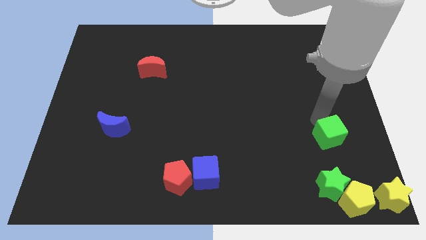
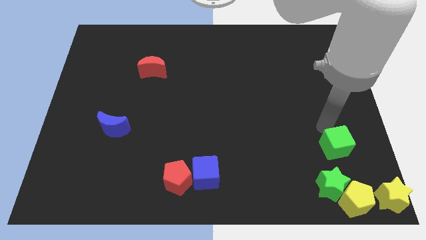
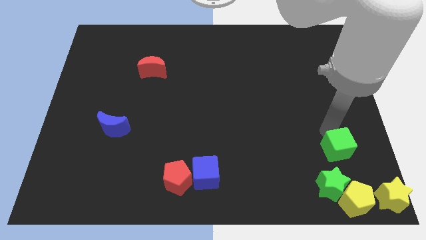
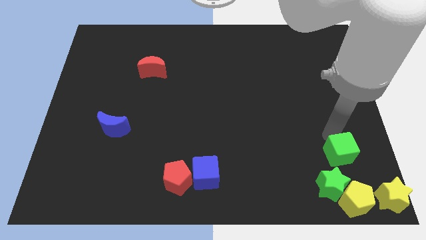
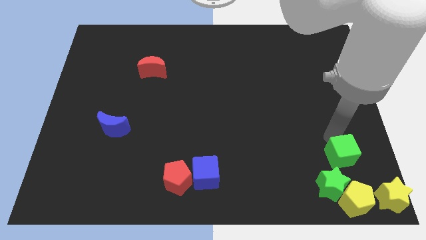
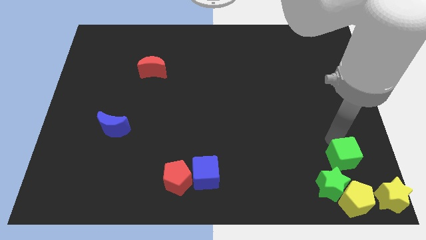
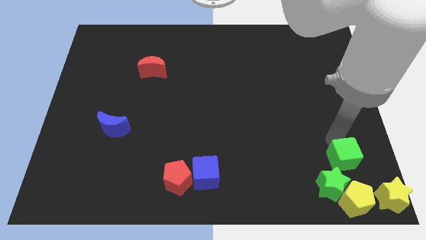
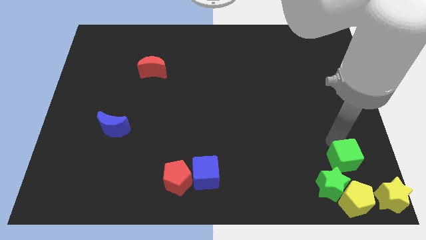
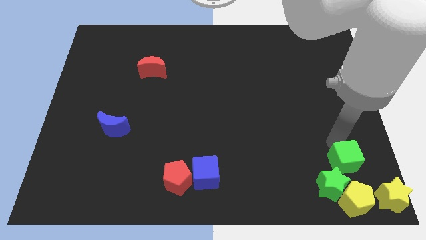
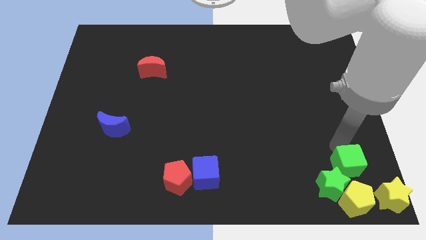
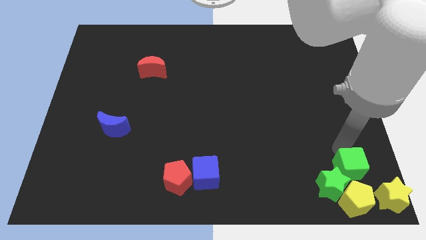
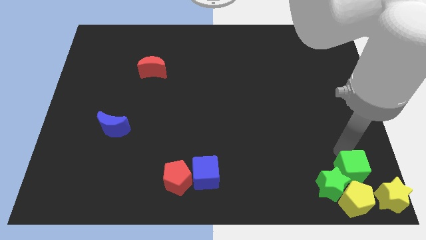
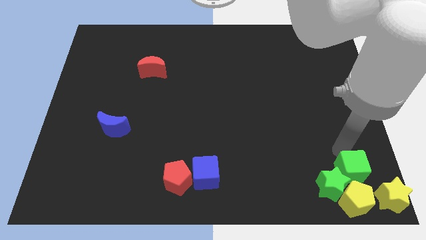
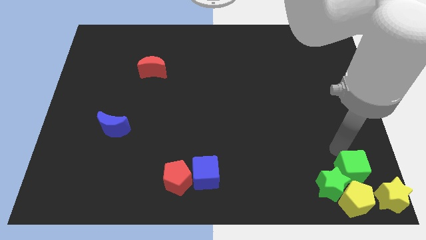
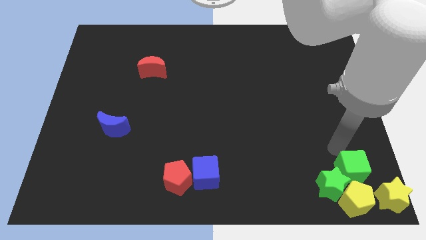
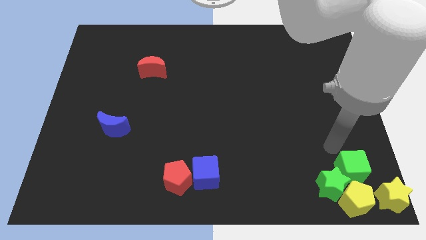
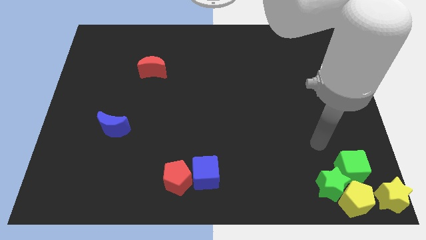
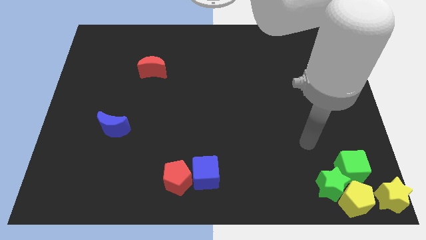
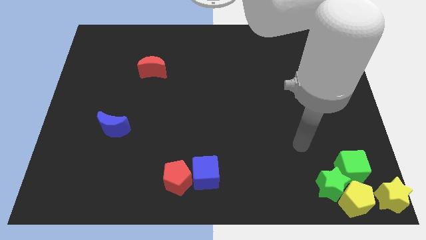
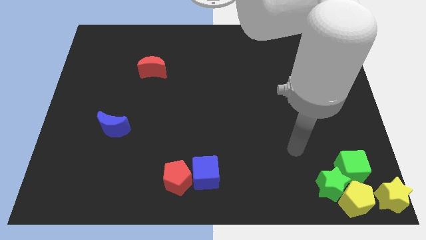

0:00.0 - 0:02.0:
add the green cube to the group of both yellow blocks and green star

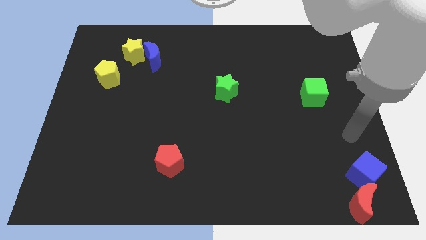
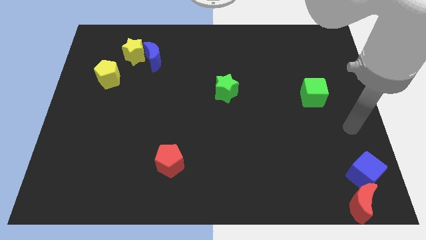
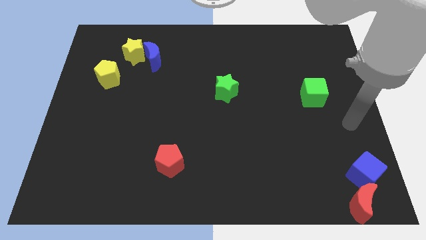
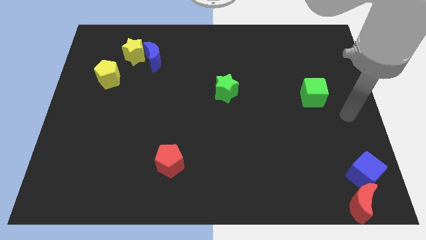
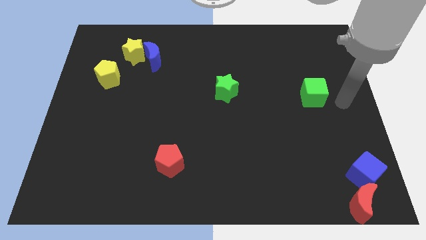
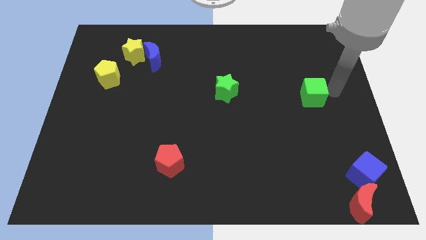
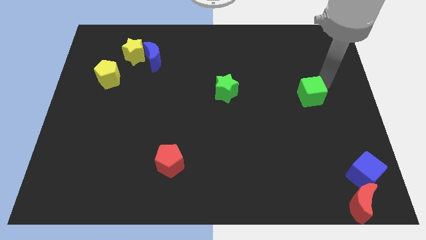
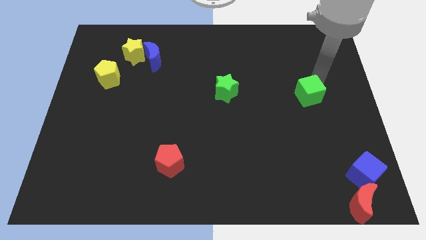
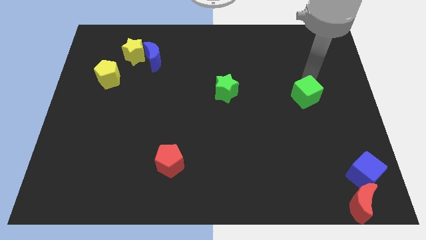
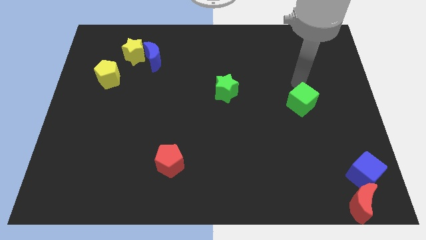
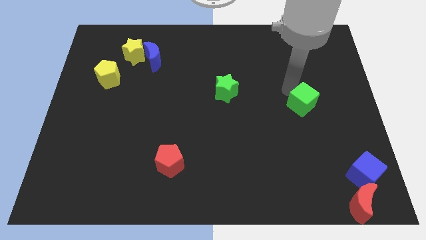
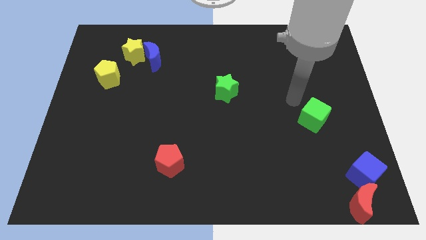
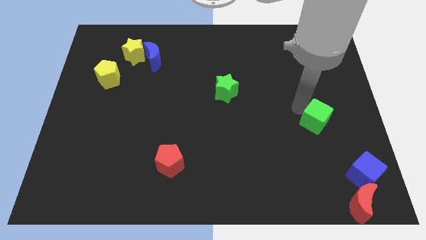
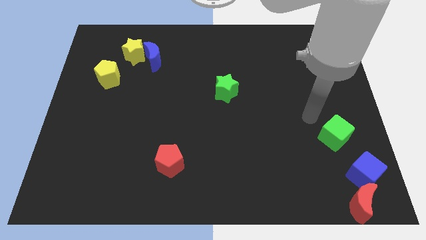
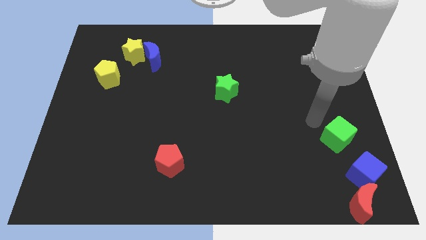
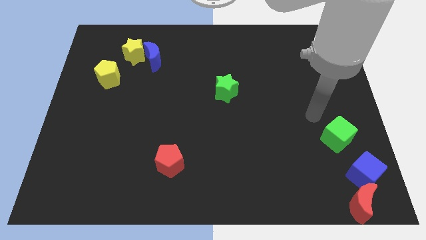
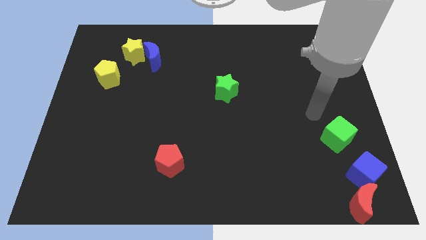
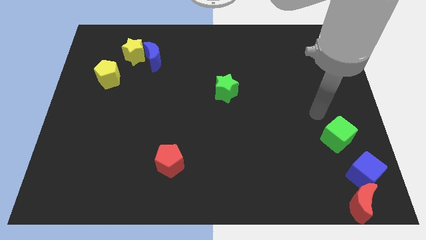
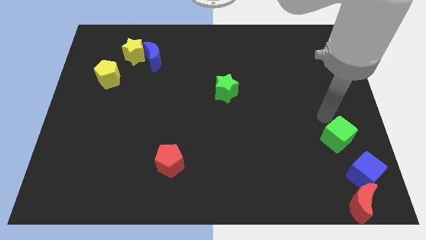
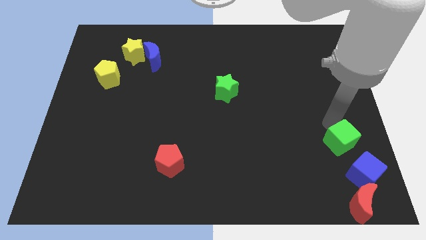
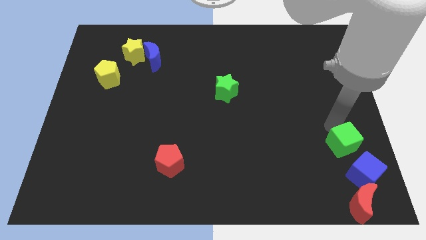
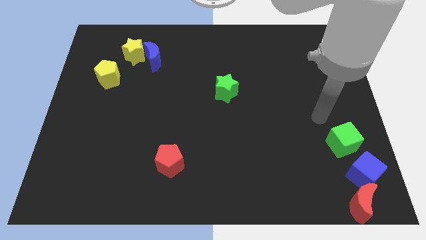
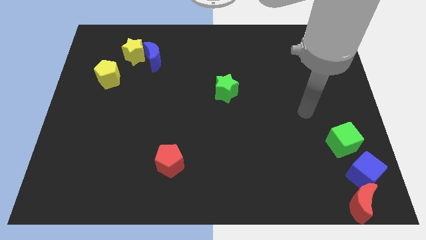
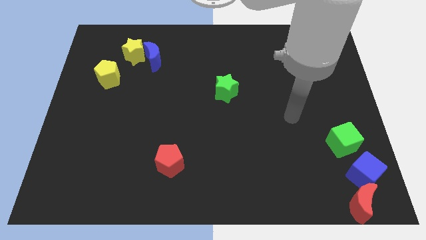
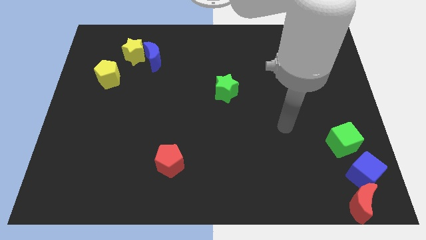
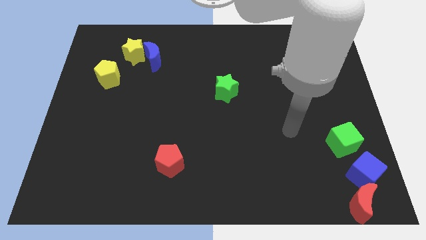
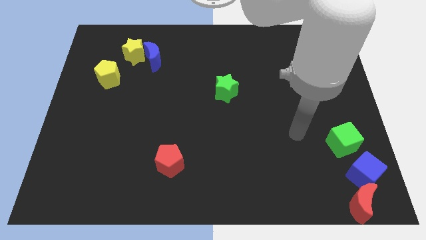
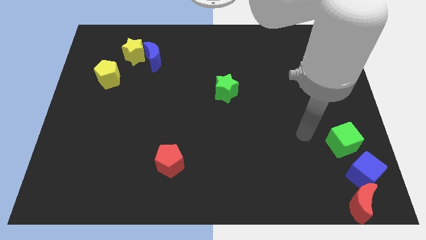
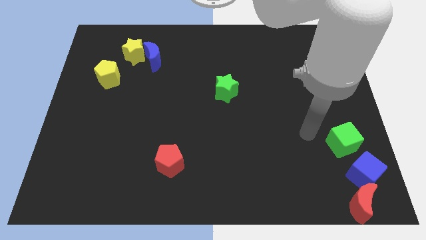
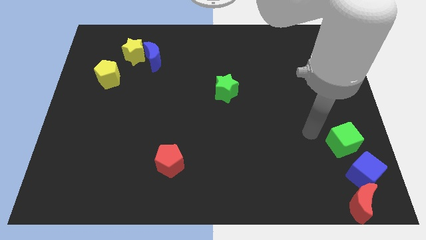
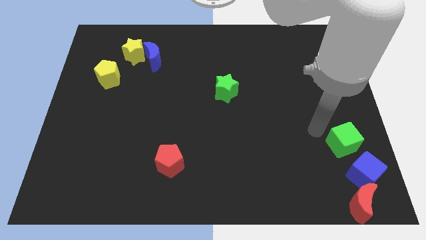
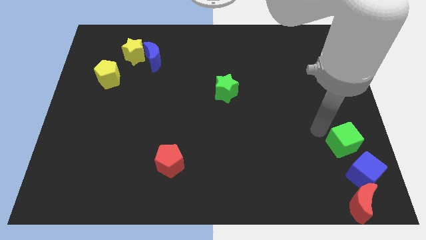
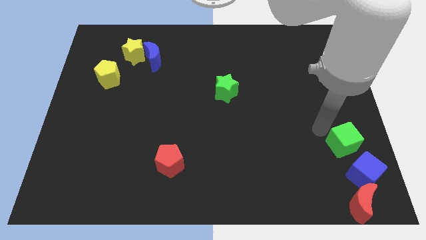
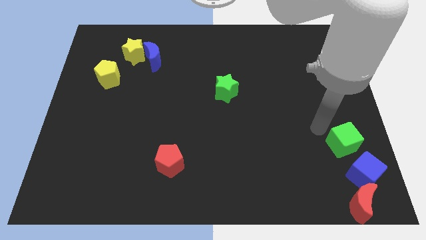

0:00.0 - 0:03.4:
push the green cube to the top of the blue cube

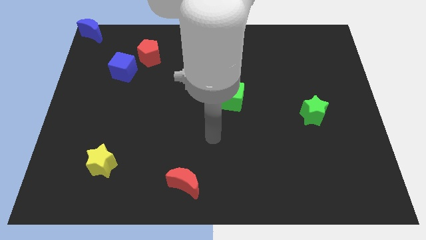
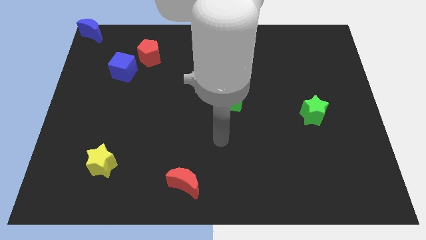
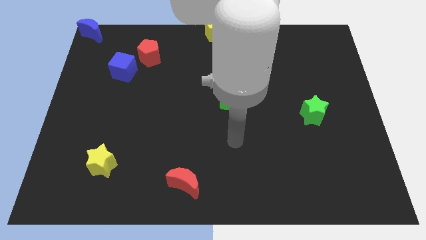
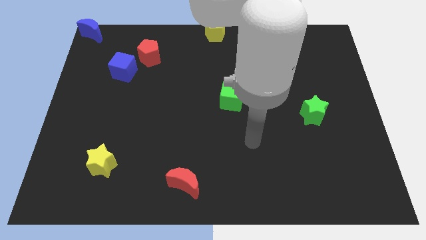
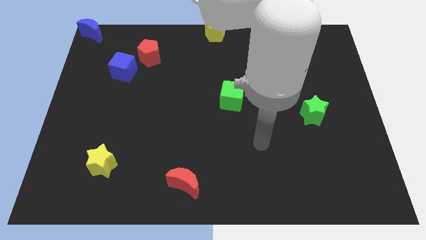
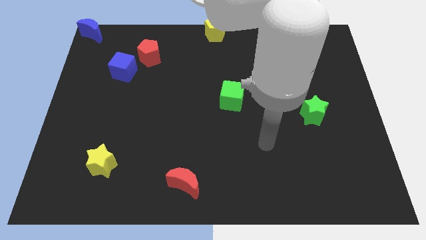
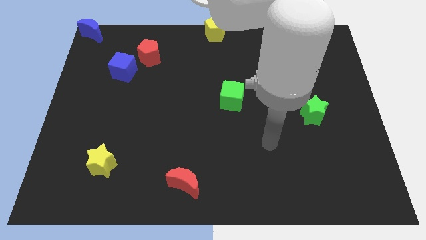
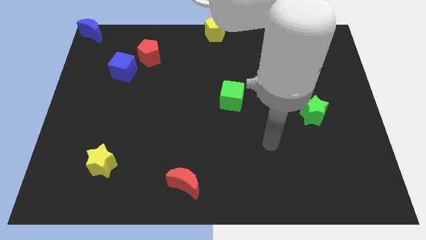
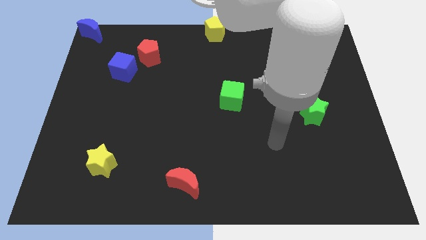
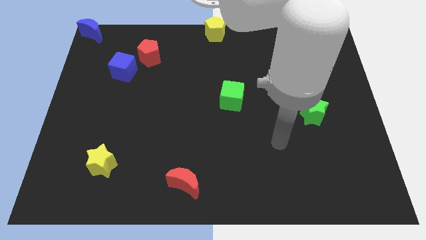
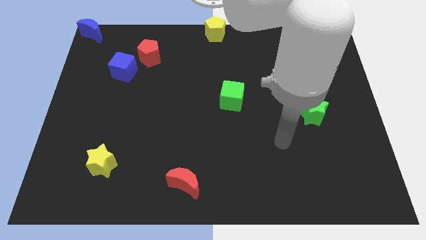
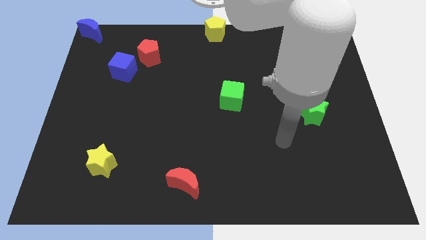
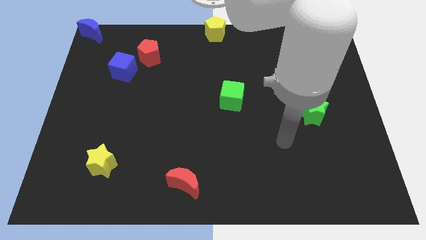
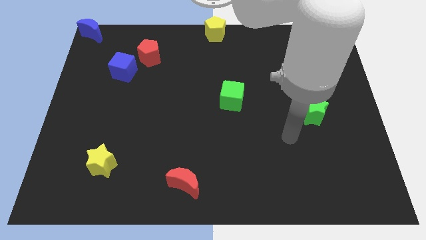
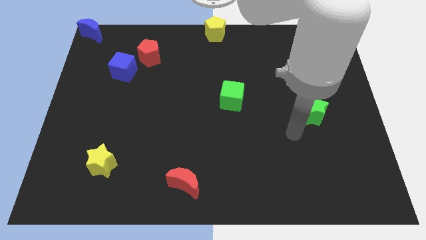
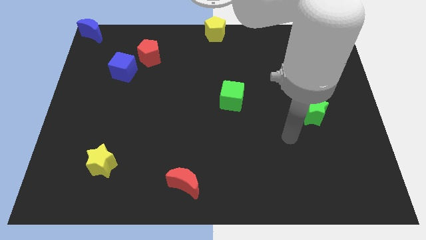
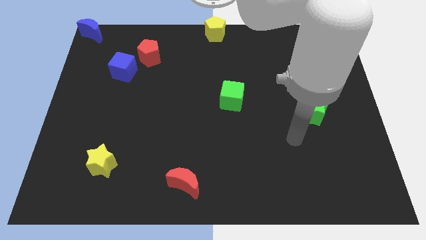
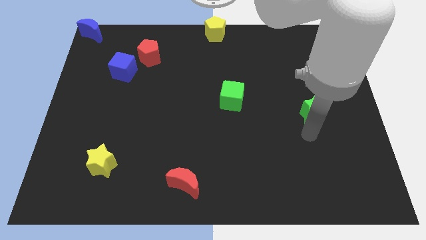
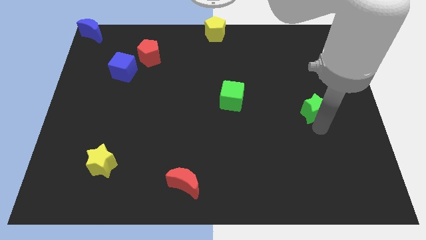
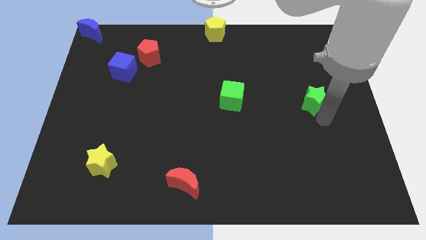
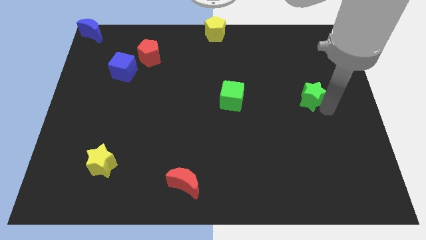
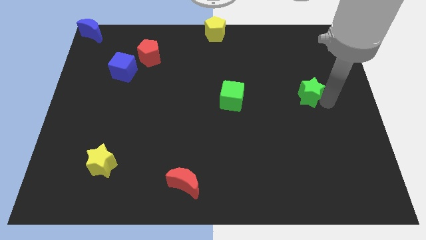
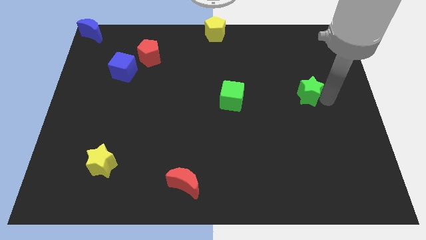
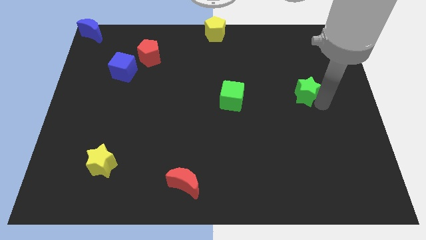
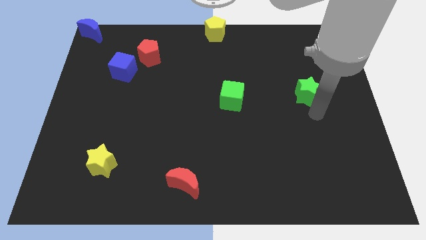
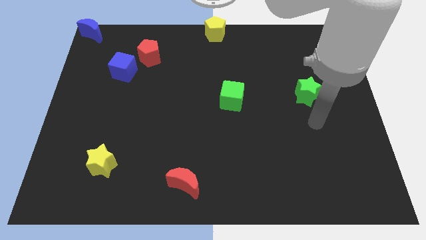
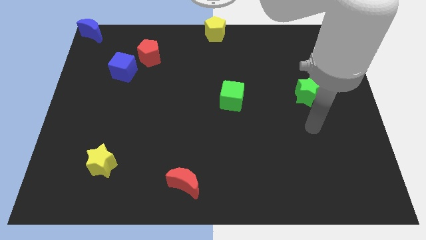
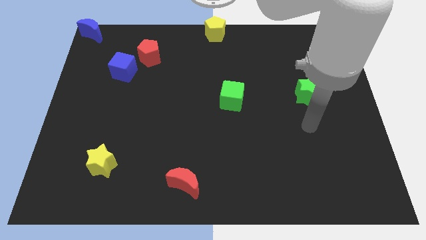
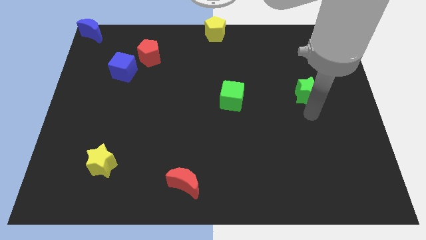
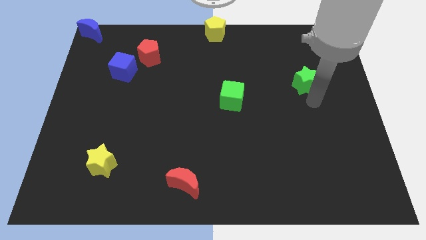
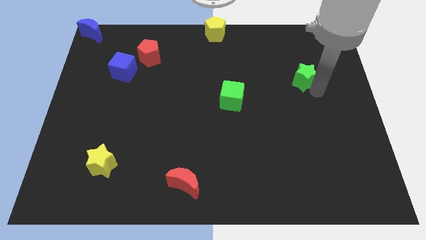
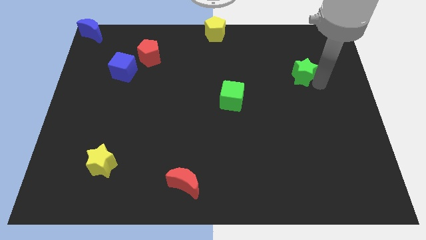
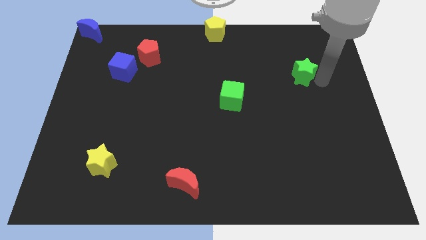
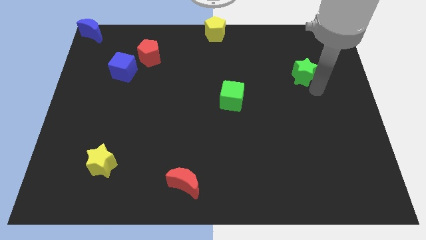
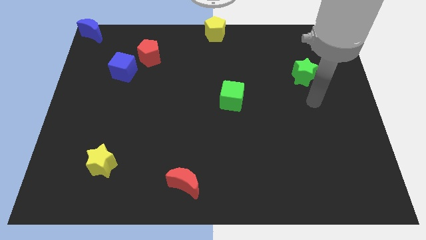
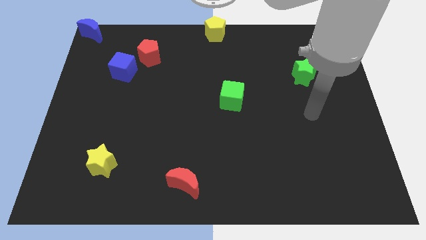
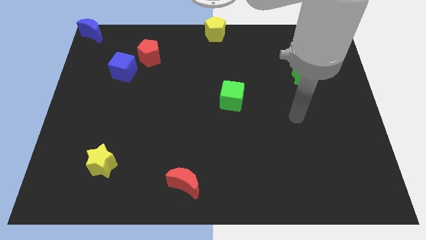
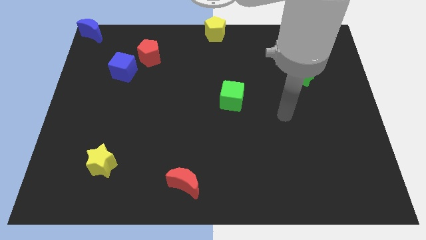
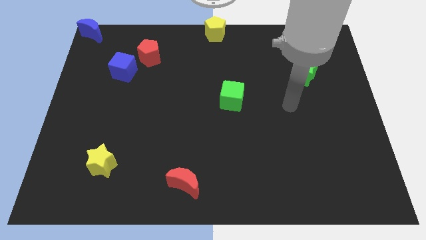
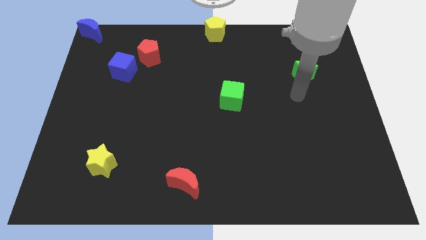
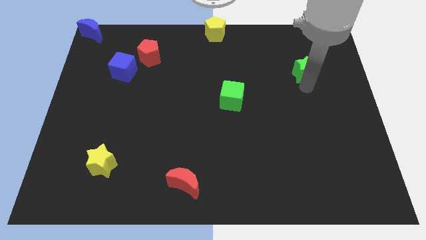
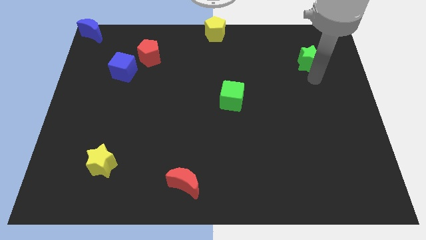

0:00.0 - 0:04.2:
push the green star upward
